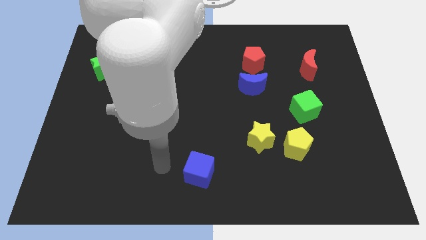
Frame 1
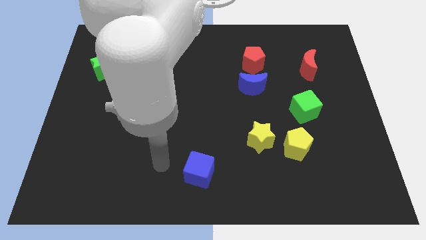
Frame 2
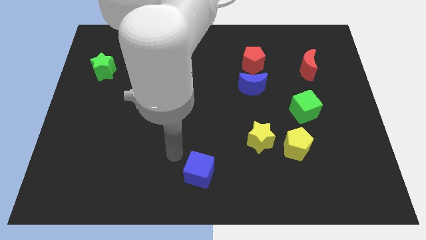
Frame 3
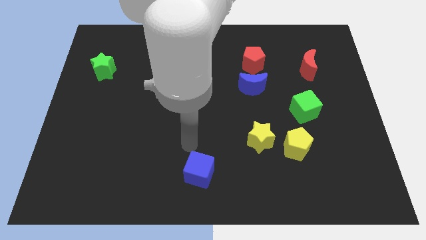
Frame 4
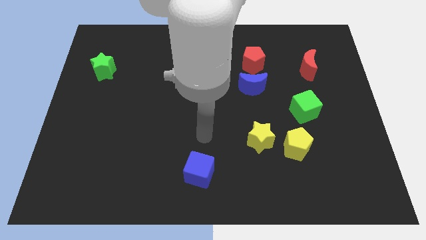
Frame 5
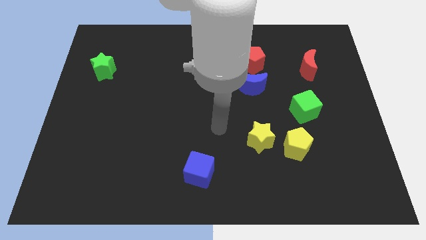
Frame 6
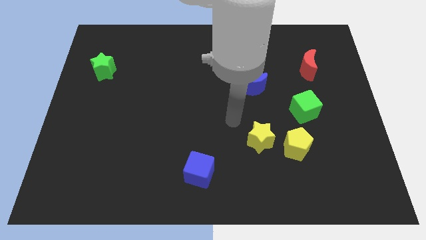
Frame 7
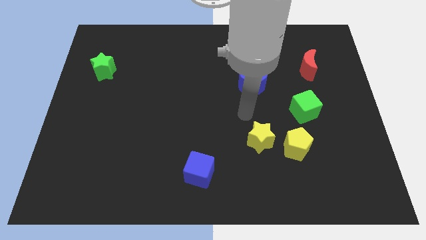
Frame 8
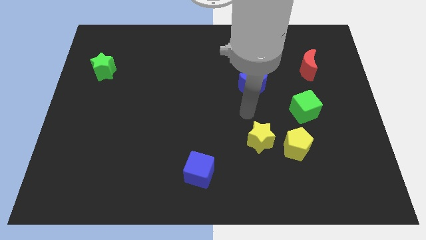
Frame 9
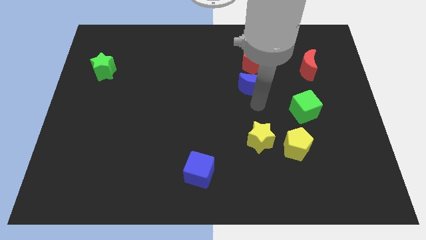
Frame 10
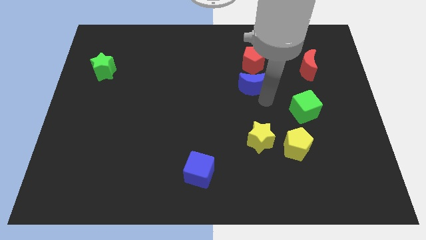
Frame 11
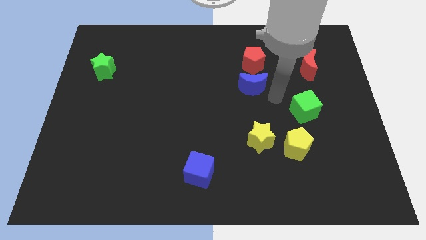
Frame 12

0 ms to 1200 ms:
move your arm near the blue moon

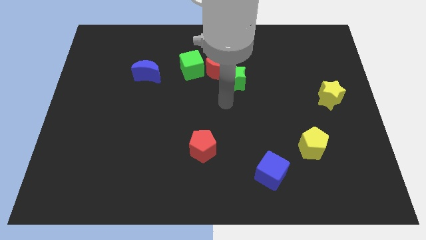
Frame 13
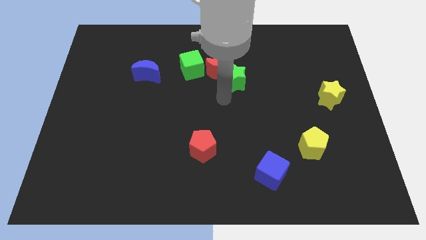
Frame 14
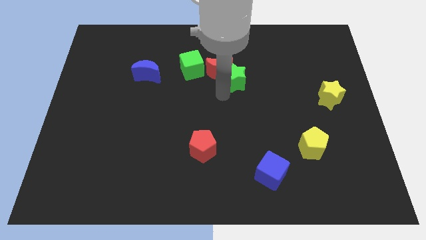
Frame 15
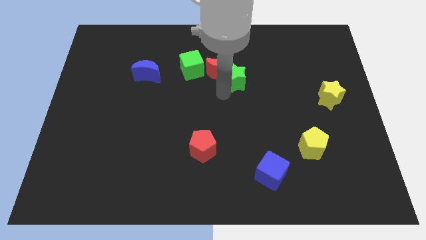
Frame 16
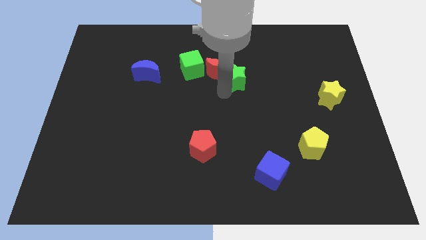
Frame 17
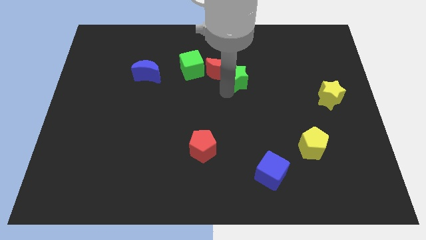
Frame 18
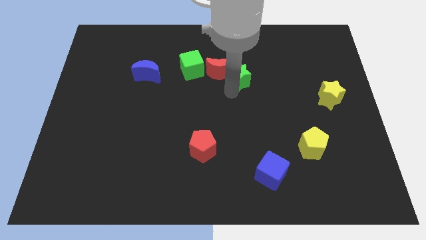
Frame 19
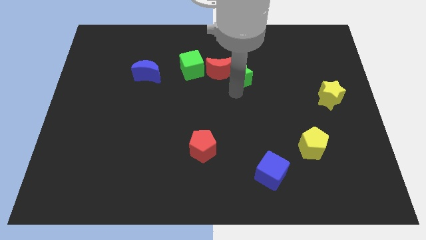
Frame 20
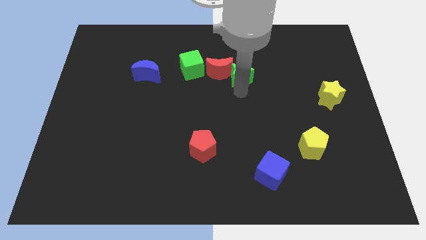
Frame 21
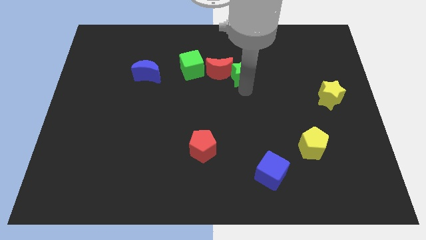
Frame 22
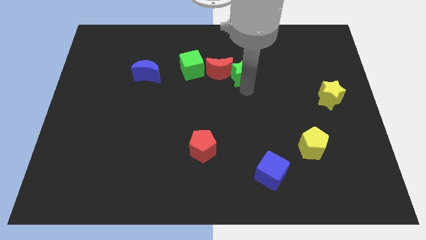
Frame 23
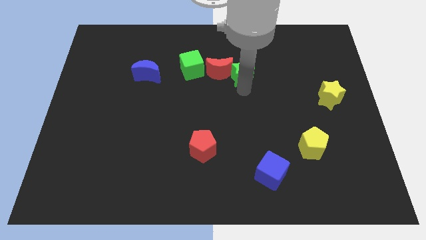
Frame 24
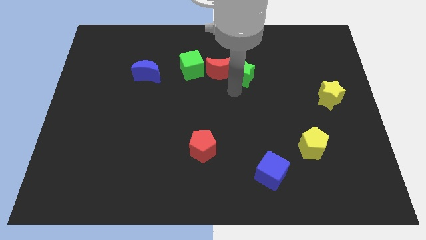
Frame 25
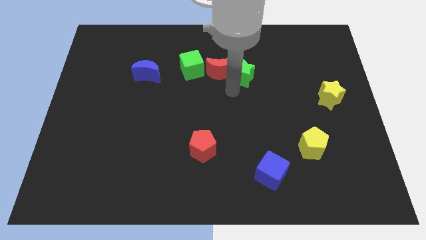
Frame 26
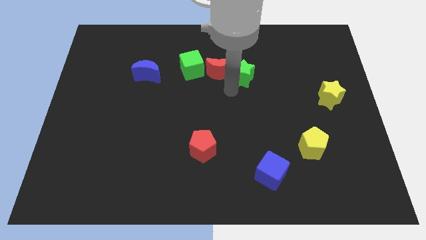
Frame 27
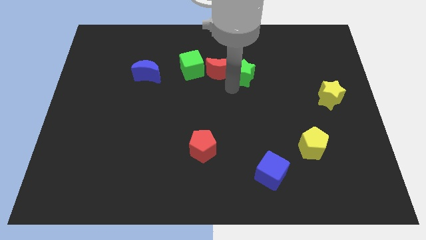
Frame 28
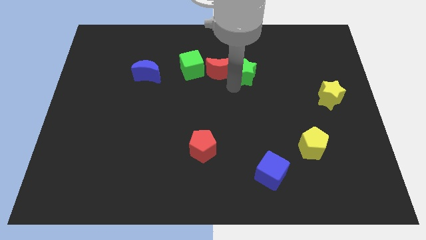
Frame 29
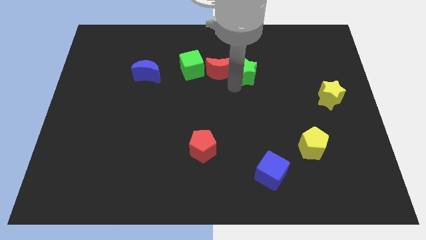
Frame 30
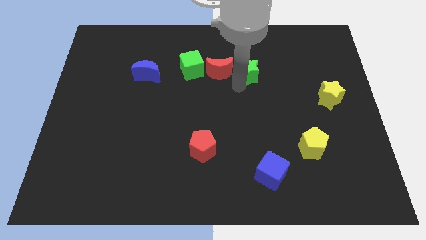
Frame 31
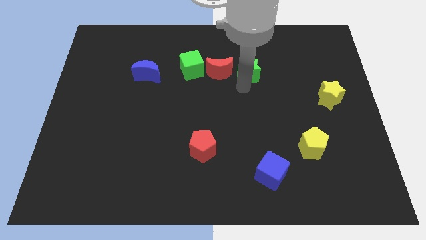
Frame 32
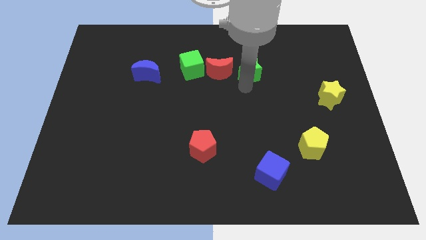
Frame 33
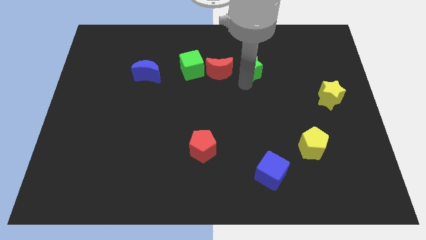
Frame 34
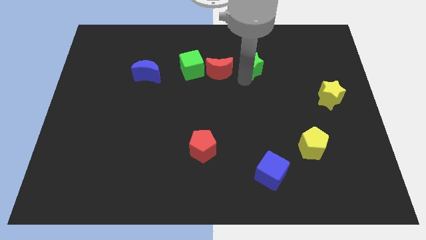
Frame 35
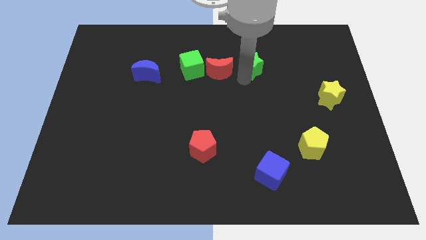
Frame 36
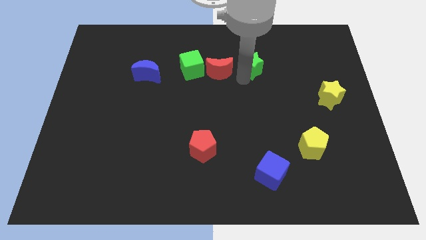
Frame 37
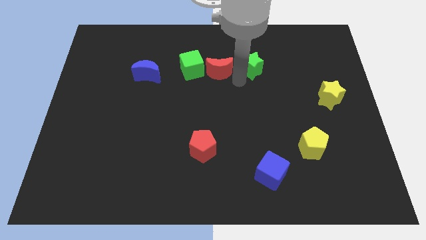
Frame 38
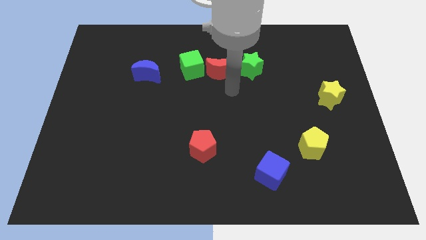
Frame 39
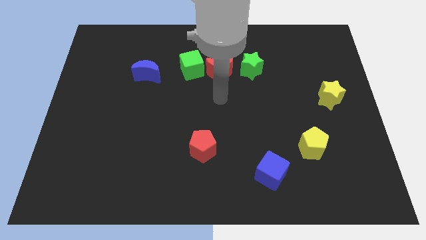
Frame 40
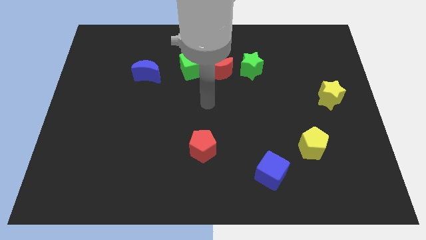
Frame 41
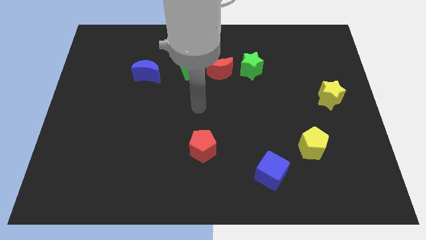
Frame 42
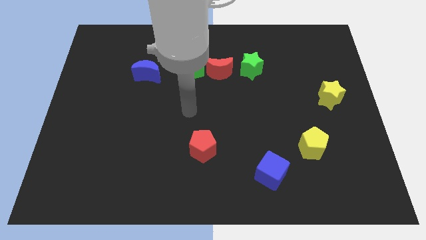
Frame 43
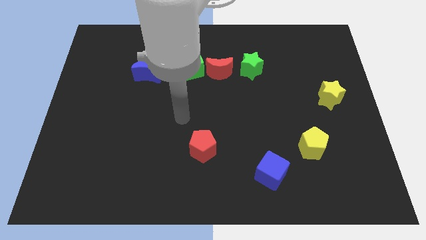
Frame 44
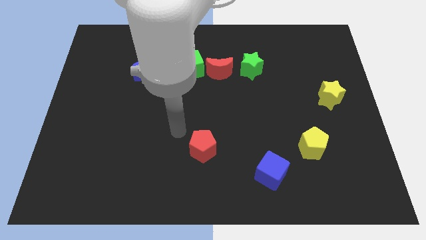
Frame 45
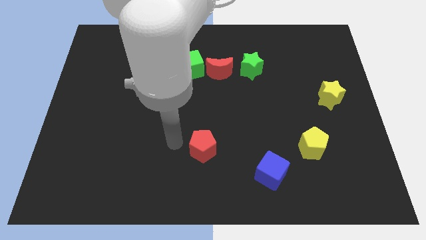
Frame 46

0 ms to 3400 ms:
place the green star to the right side of the red moon

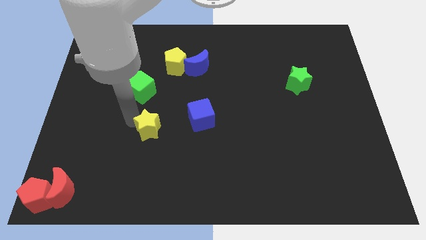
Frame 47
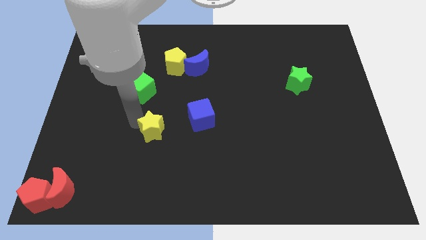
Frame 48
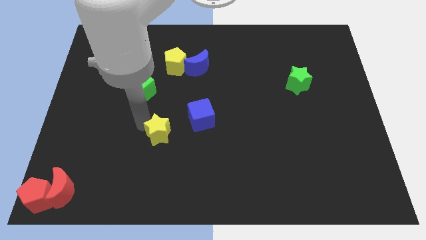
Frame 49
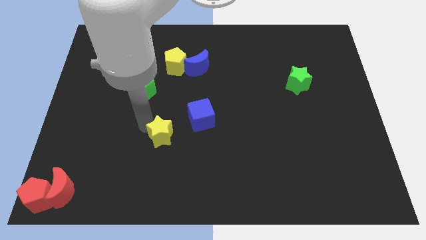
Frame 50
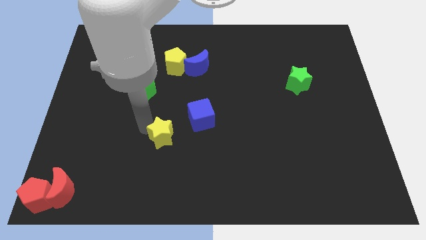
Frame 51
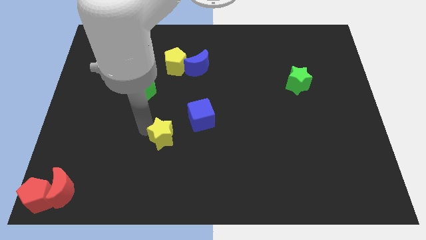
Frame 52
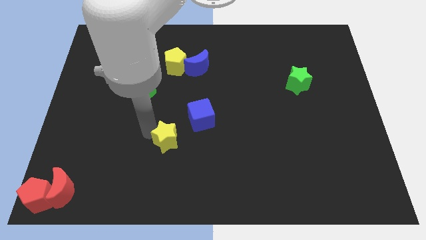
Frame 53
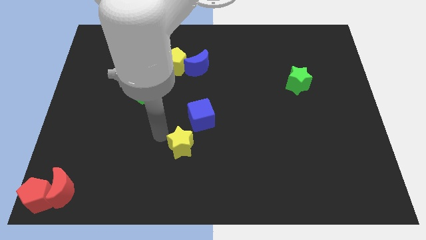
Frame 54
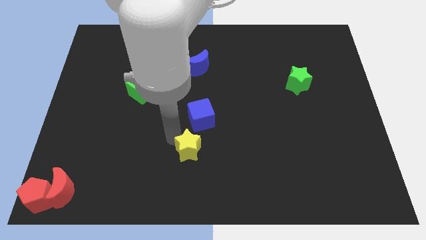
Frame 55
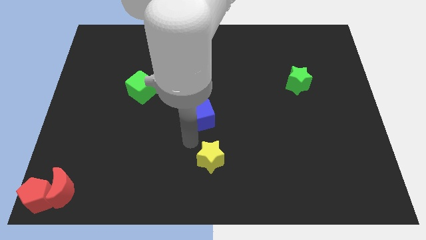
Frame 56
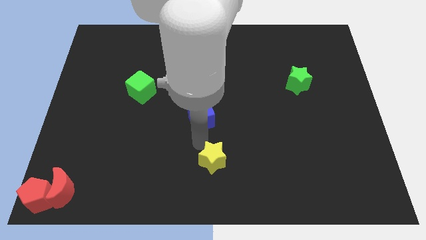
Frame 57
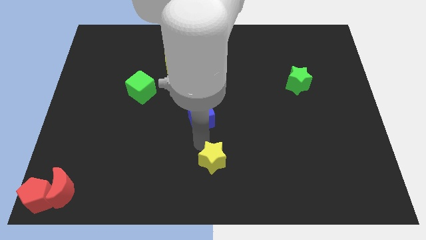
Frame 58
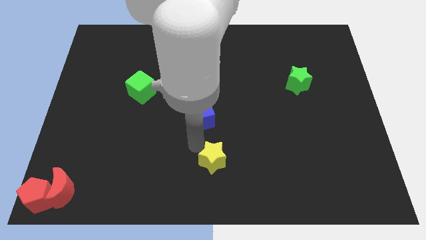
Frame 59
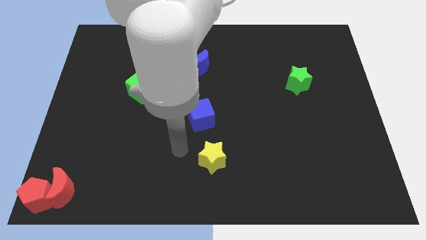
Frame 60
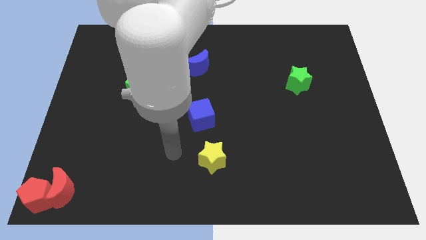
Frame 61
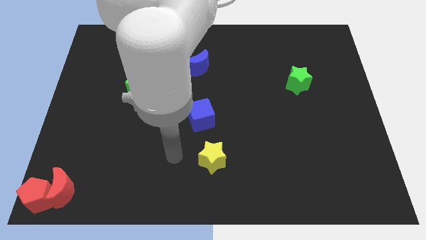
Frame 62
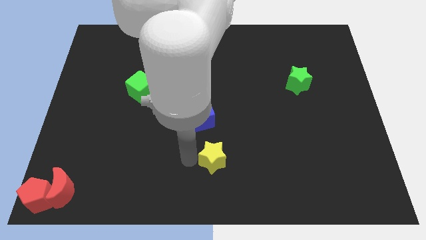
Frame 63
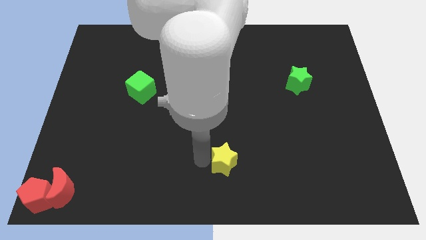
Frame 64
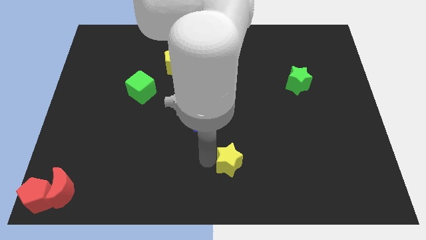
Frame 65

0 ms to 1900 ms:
move the yellow star towards the bottom right corner of the board

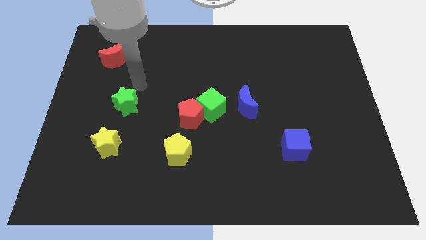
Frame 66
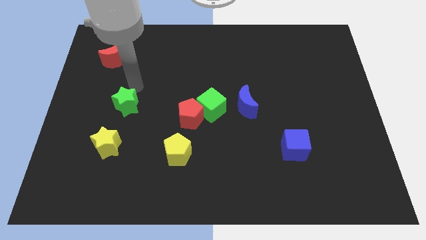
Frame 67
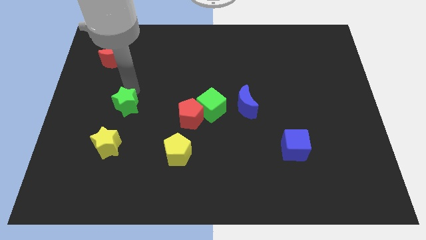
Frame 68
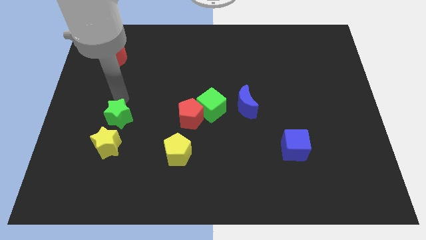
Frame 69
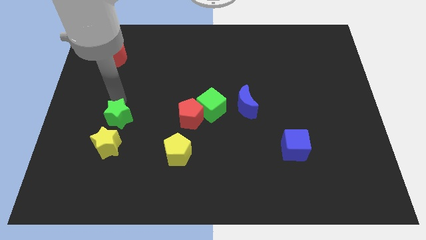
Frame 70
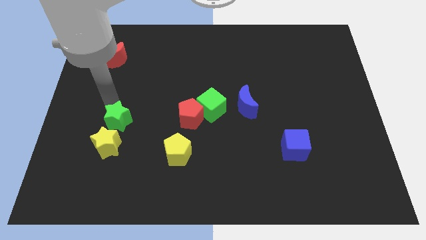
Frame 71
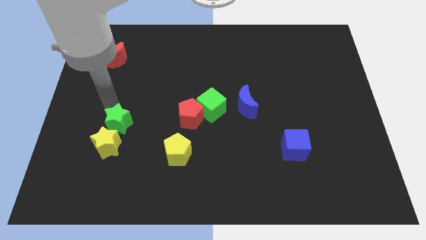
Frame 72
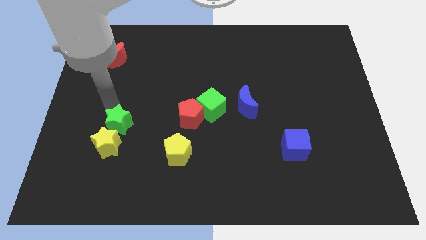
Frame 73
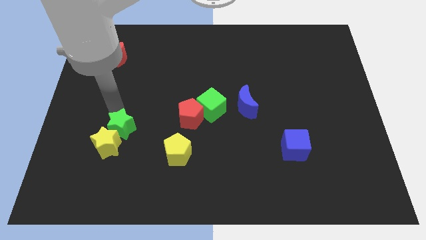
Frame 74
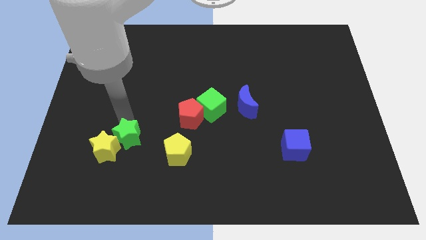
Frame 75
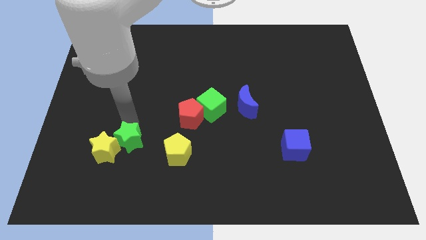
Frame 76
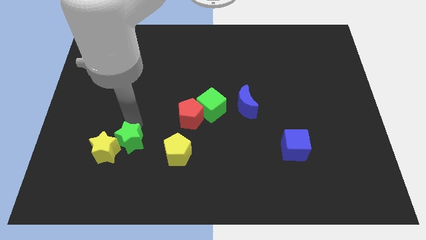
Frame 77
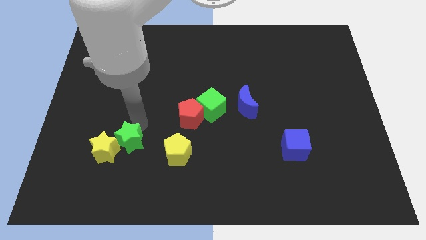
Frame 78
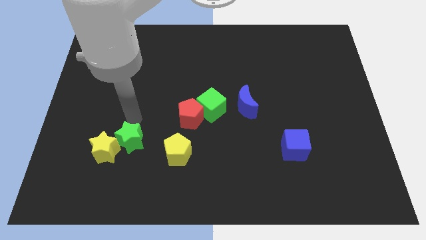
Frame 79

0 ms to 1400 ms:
move the green star to the right of the yellow star

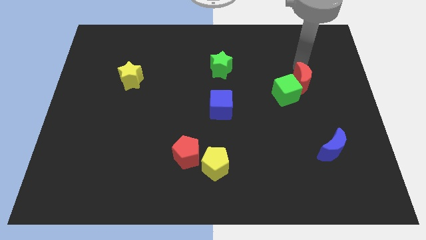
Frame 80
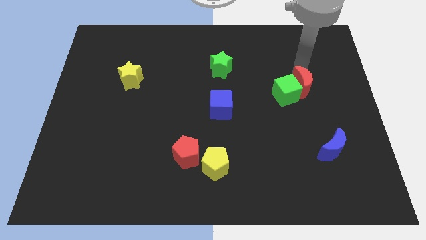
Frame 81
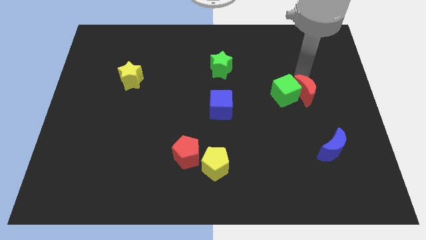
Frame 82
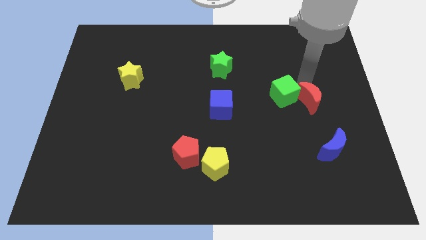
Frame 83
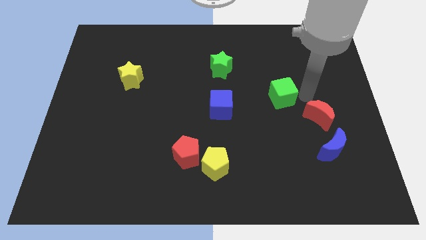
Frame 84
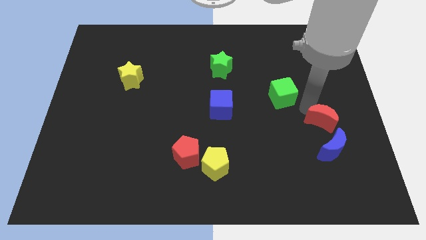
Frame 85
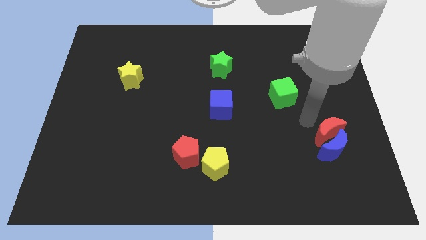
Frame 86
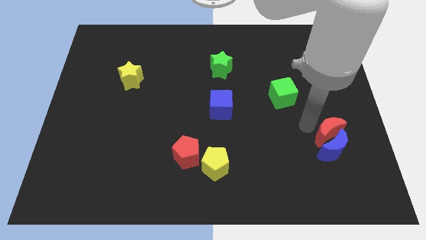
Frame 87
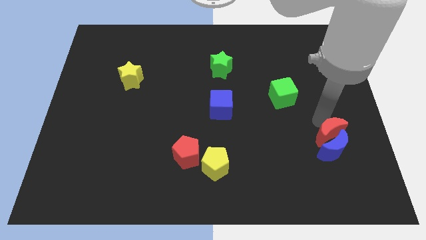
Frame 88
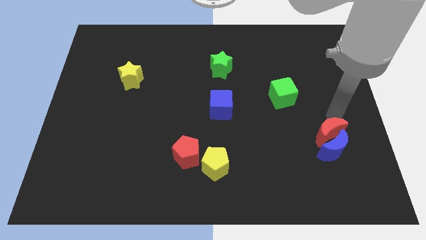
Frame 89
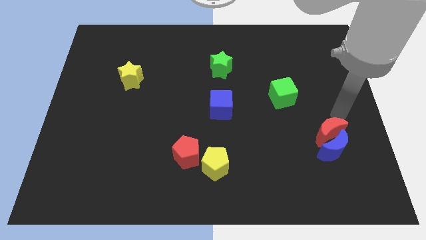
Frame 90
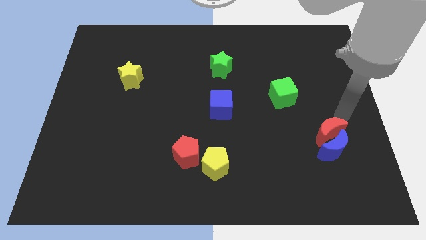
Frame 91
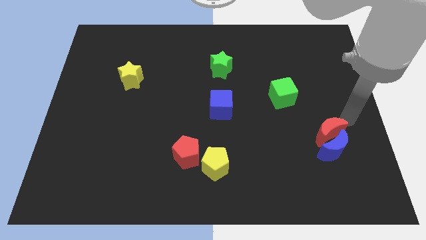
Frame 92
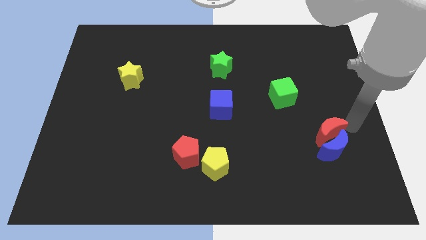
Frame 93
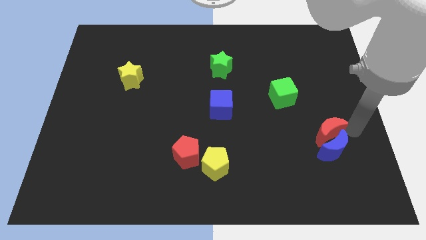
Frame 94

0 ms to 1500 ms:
slide the red moon into the blue moon
